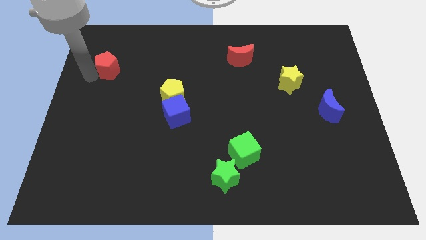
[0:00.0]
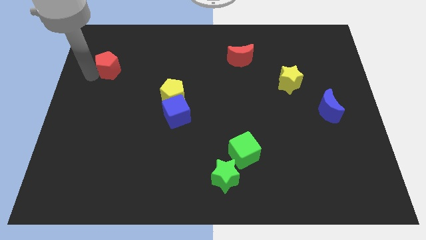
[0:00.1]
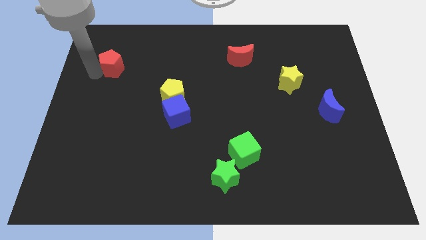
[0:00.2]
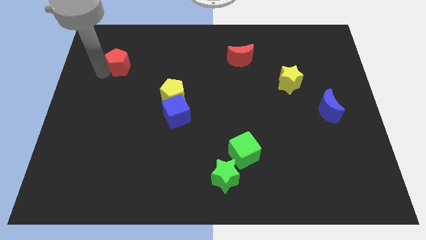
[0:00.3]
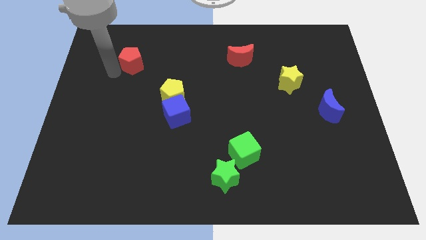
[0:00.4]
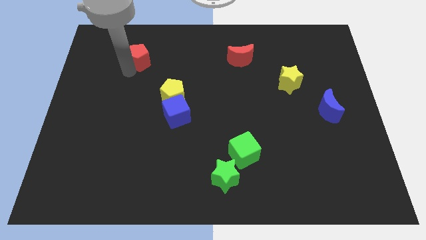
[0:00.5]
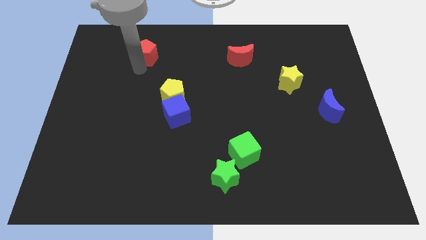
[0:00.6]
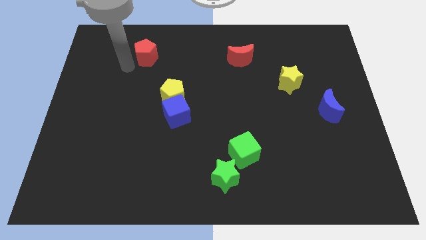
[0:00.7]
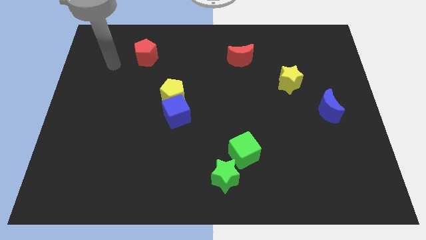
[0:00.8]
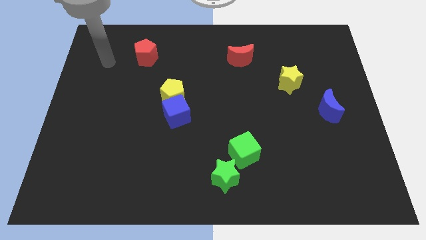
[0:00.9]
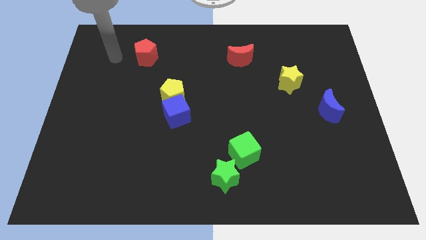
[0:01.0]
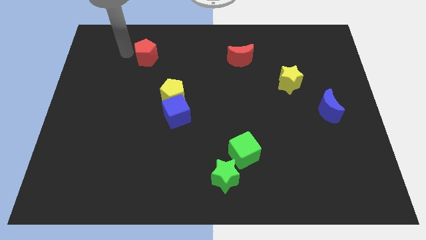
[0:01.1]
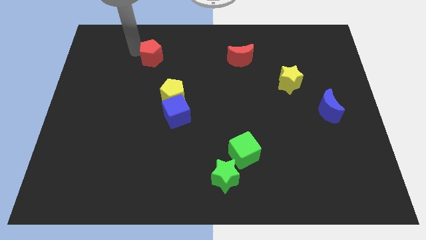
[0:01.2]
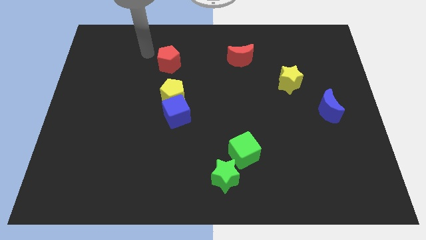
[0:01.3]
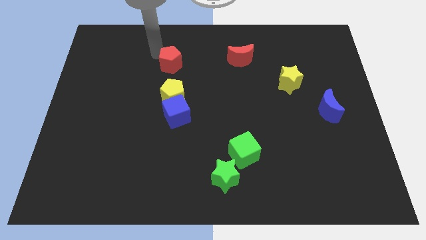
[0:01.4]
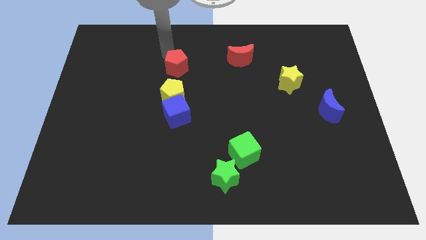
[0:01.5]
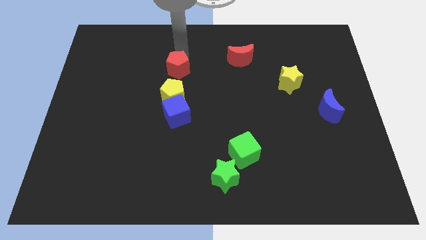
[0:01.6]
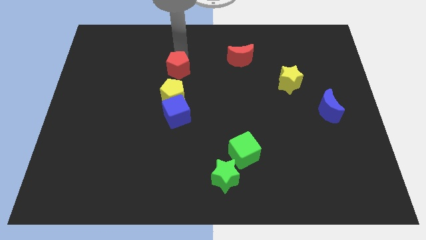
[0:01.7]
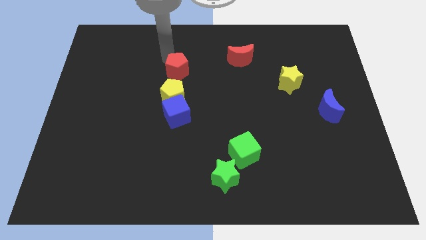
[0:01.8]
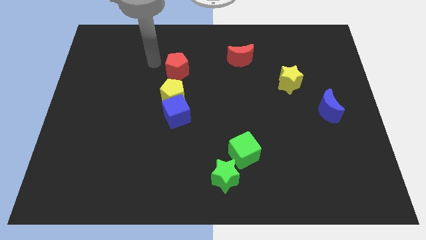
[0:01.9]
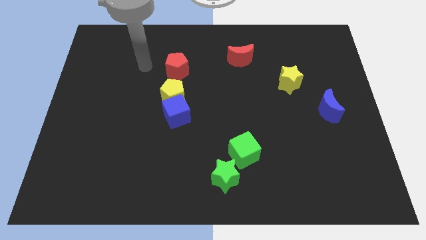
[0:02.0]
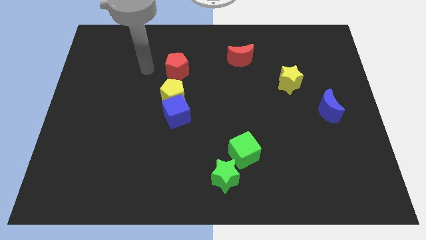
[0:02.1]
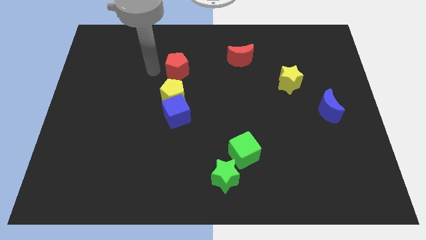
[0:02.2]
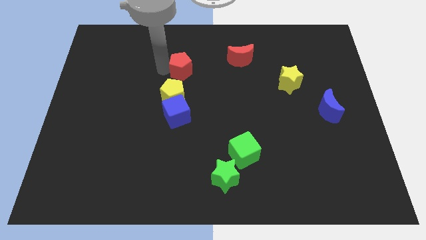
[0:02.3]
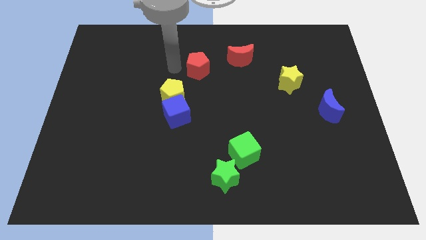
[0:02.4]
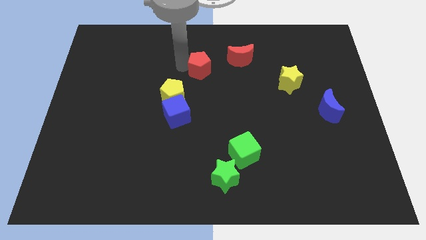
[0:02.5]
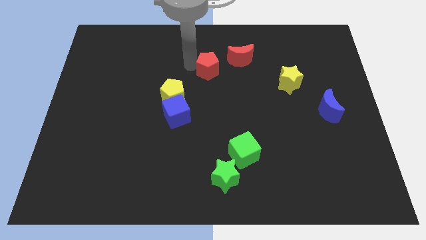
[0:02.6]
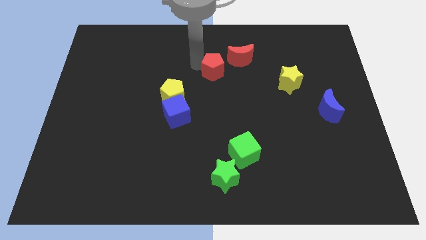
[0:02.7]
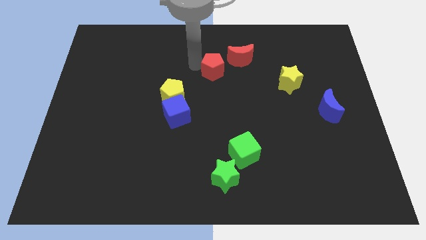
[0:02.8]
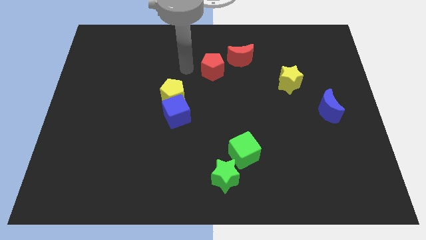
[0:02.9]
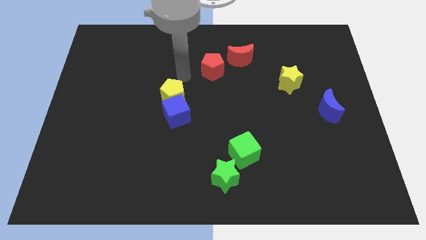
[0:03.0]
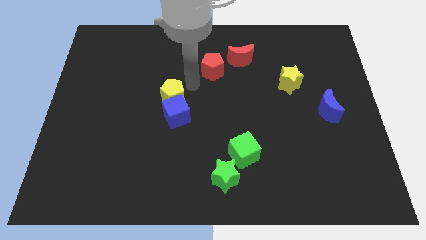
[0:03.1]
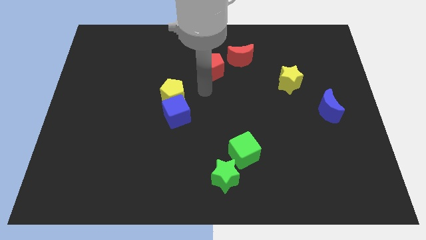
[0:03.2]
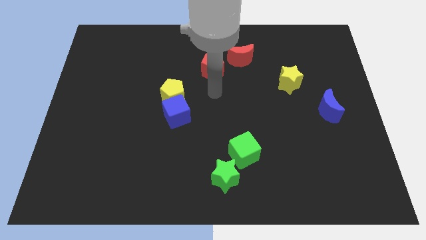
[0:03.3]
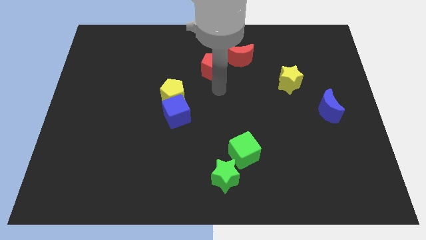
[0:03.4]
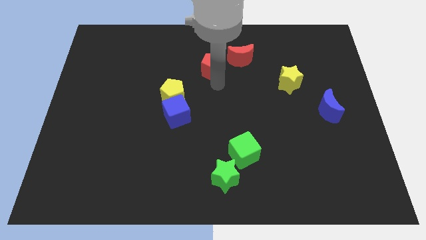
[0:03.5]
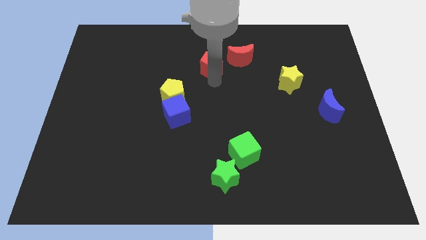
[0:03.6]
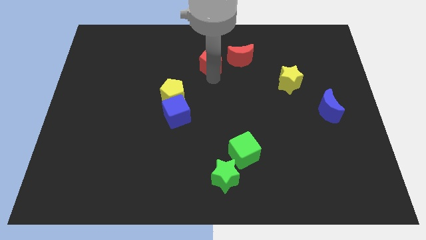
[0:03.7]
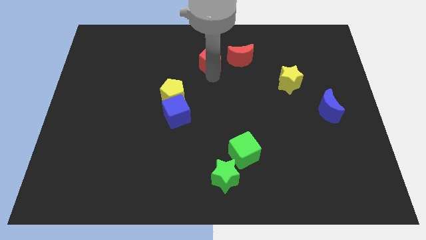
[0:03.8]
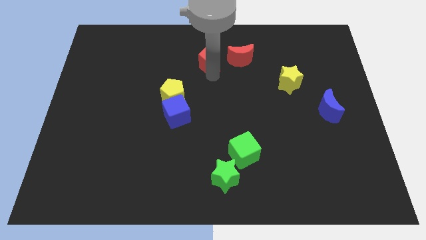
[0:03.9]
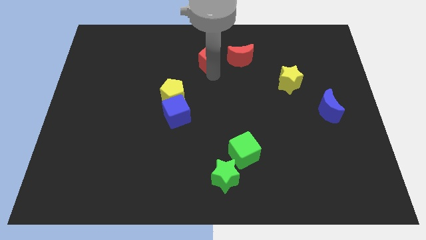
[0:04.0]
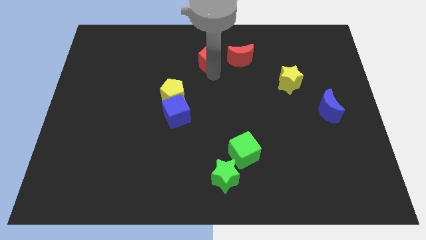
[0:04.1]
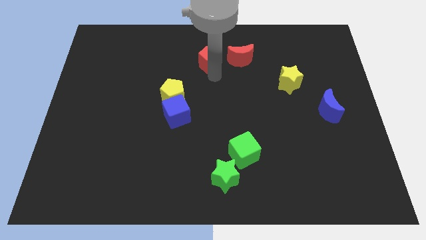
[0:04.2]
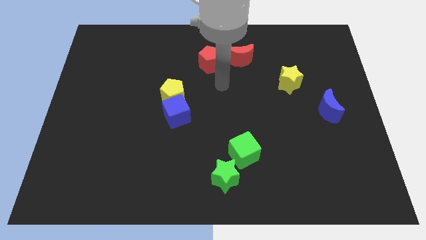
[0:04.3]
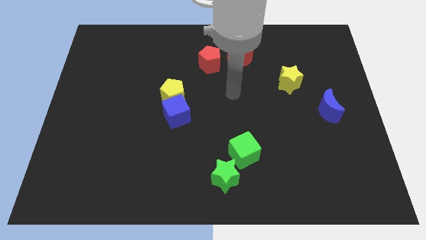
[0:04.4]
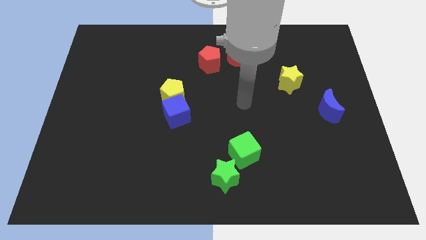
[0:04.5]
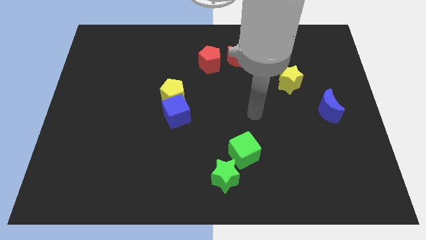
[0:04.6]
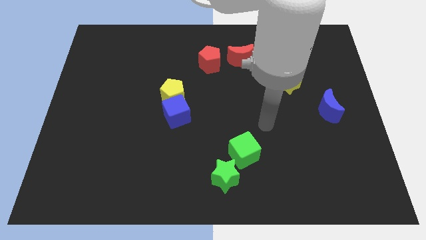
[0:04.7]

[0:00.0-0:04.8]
place the red pentagon to the left of the red crescent

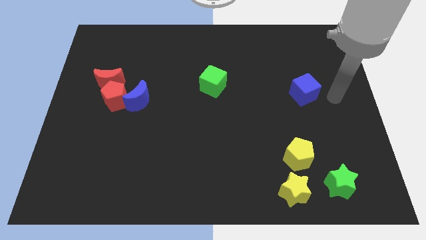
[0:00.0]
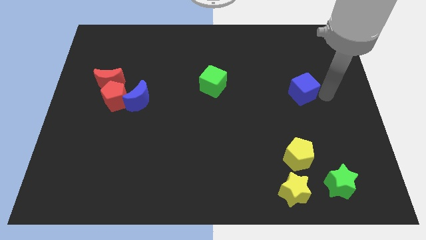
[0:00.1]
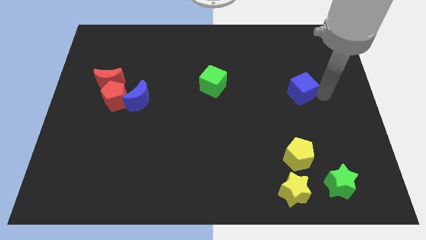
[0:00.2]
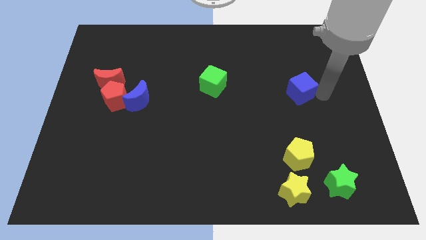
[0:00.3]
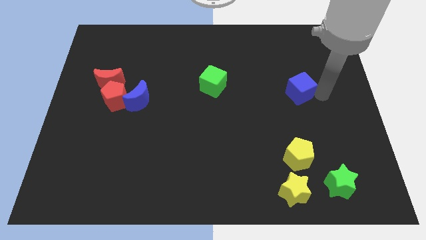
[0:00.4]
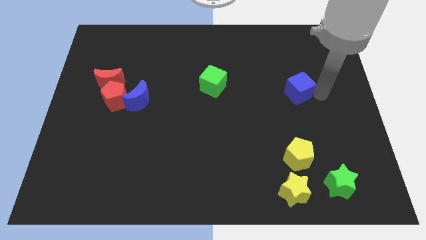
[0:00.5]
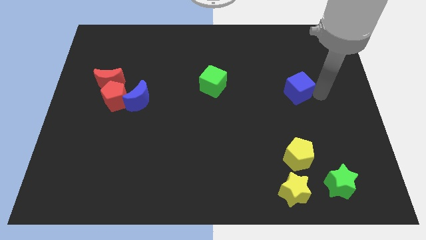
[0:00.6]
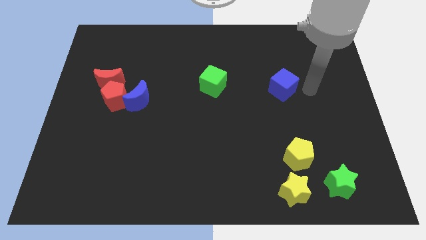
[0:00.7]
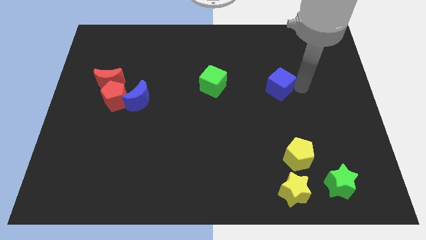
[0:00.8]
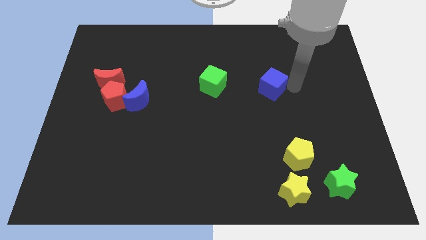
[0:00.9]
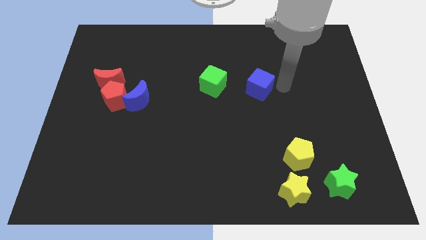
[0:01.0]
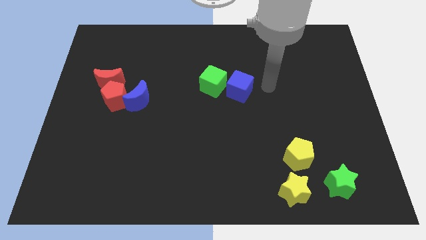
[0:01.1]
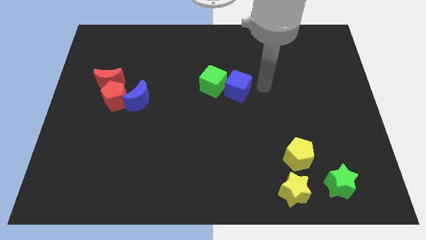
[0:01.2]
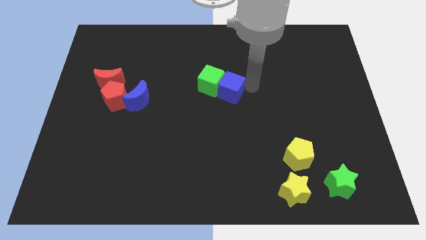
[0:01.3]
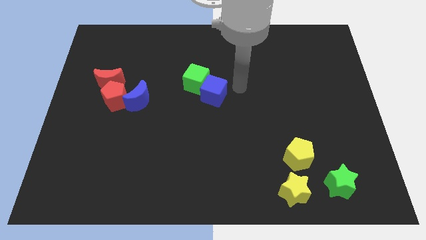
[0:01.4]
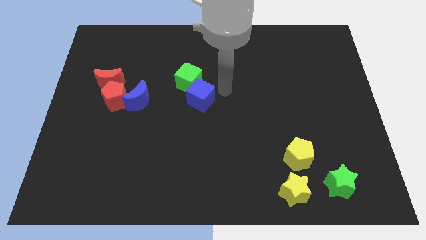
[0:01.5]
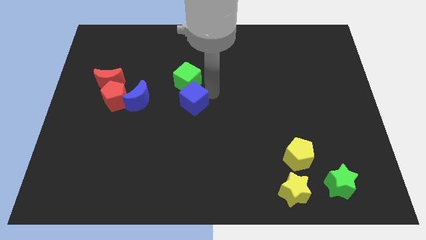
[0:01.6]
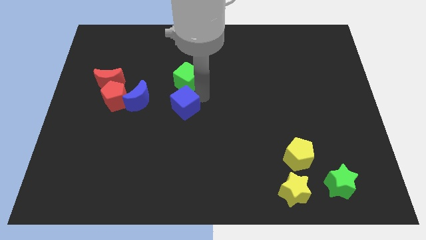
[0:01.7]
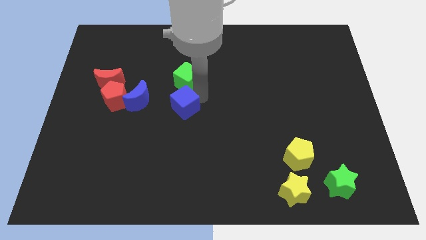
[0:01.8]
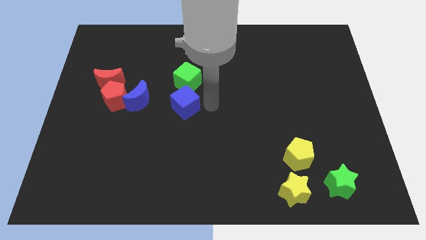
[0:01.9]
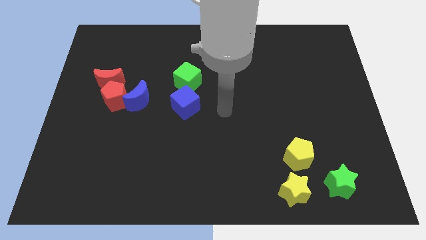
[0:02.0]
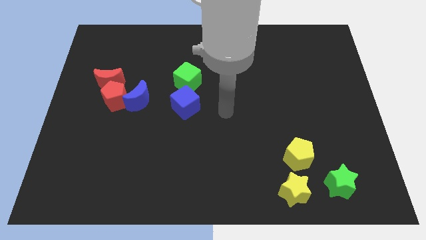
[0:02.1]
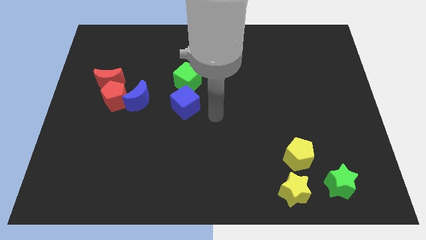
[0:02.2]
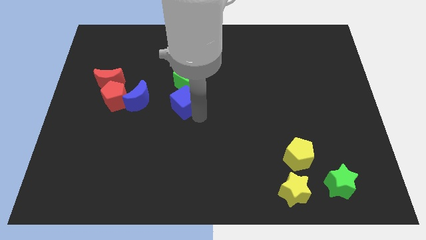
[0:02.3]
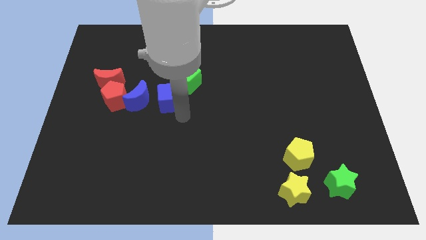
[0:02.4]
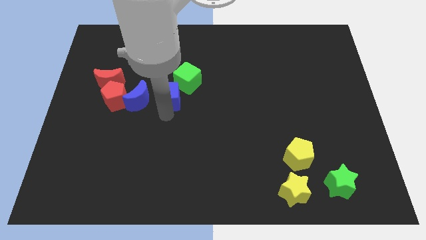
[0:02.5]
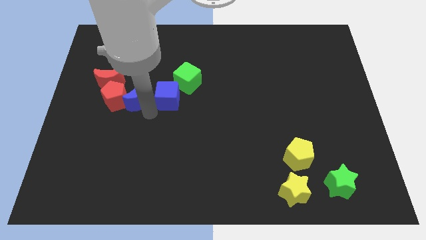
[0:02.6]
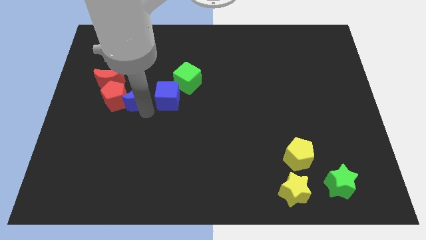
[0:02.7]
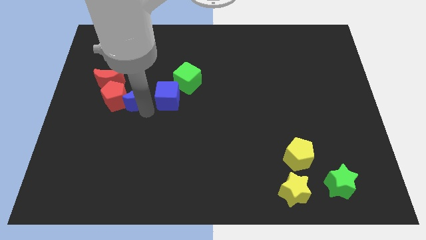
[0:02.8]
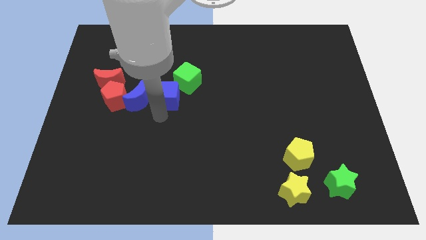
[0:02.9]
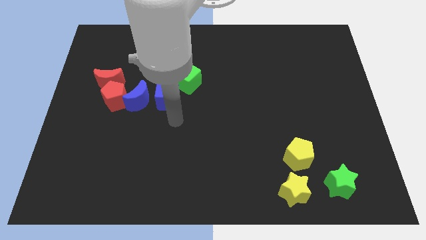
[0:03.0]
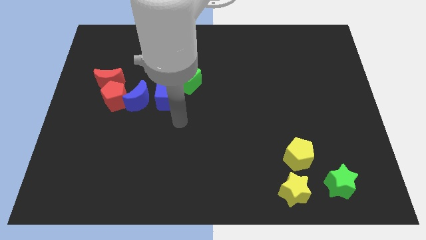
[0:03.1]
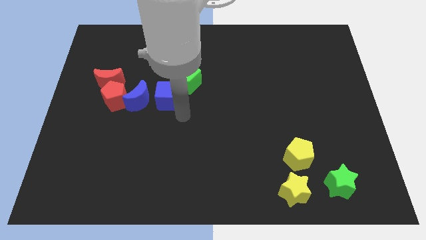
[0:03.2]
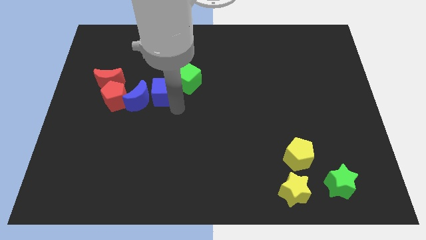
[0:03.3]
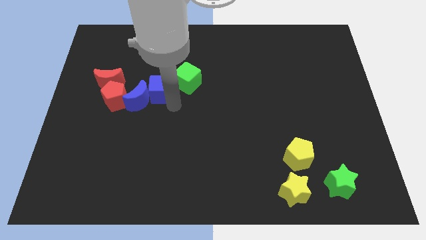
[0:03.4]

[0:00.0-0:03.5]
push the blue cube to the bottom left side of the green cube

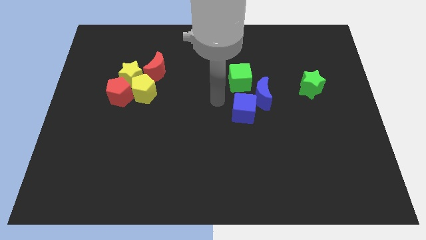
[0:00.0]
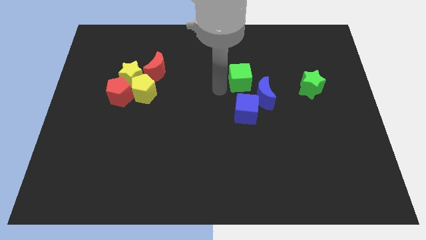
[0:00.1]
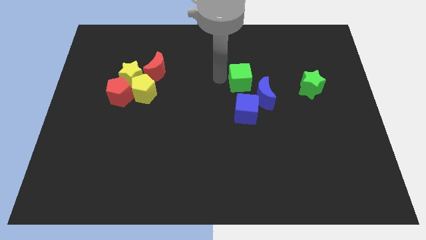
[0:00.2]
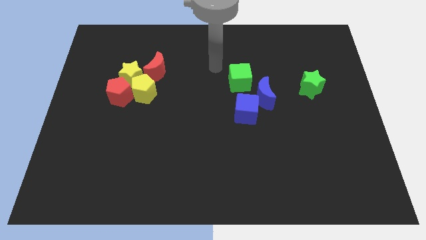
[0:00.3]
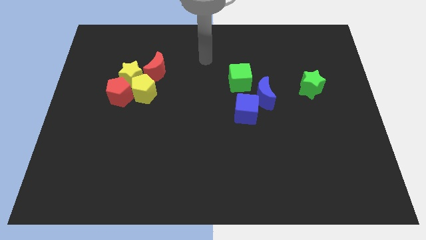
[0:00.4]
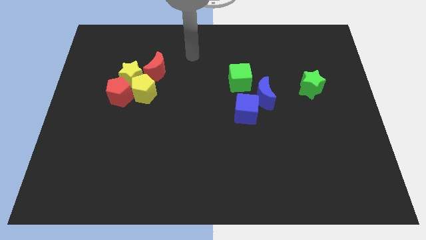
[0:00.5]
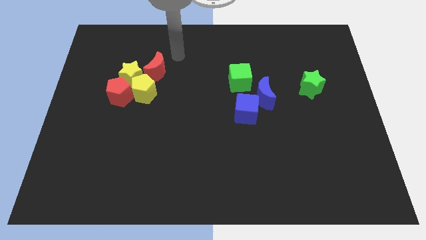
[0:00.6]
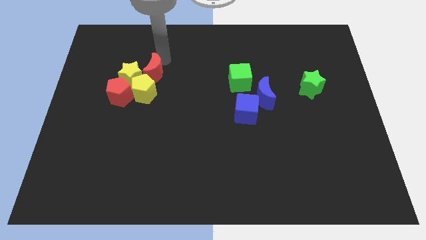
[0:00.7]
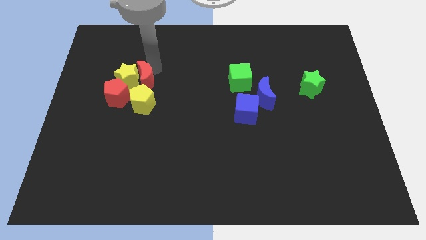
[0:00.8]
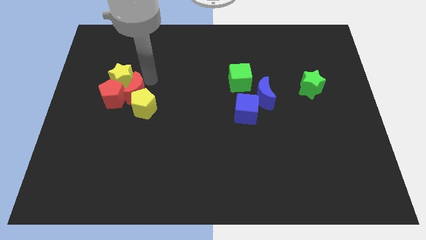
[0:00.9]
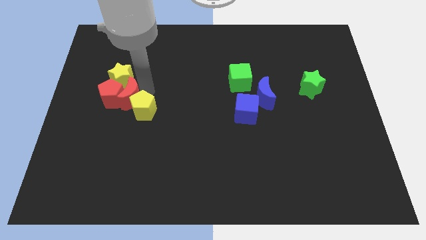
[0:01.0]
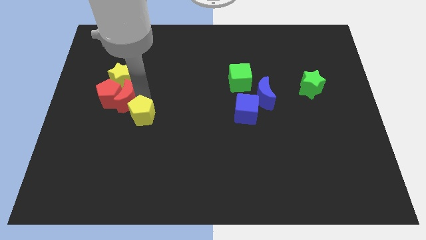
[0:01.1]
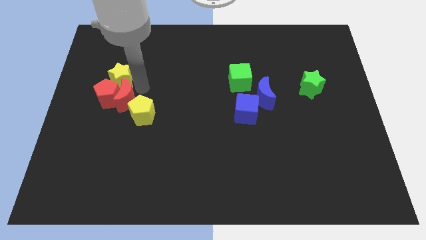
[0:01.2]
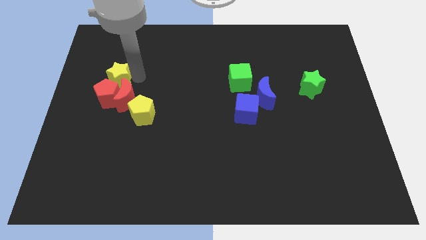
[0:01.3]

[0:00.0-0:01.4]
move the red moon into the red pentagon
